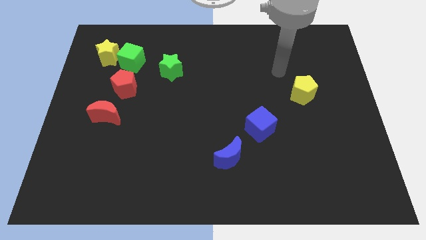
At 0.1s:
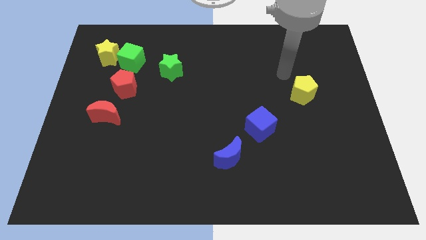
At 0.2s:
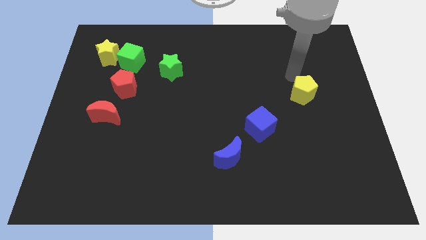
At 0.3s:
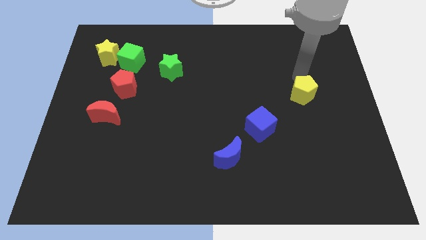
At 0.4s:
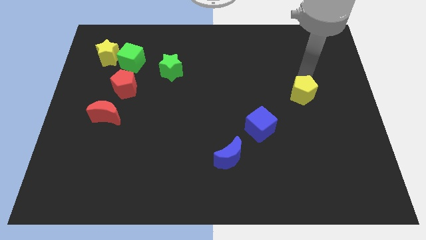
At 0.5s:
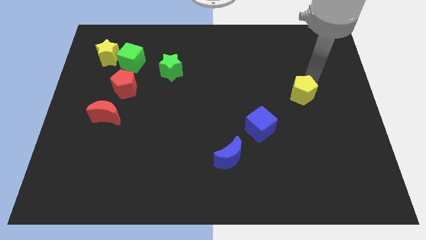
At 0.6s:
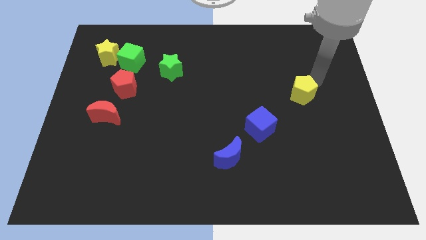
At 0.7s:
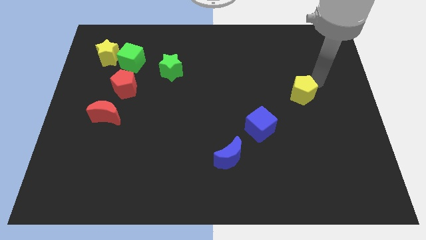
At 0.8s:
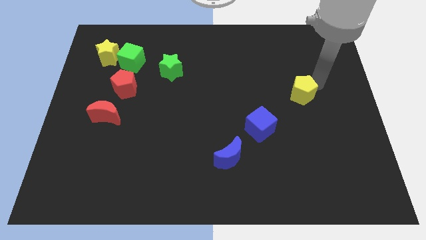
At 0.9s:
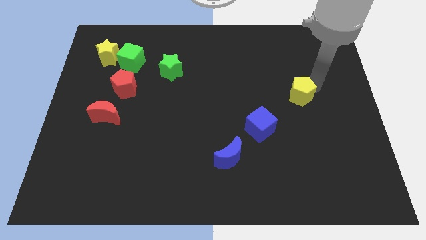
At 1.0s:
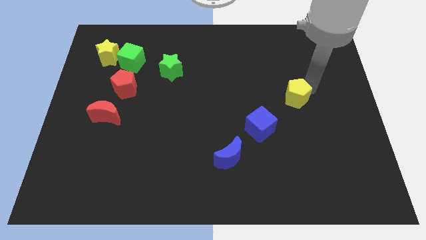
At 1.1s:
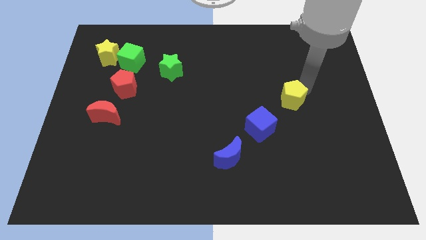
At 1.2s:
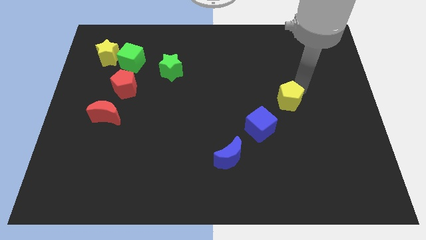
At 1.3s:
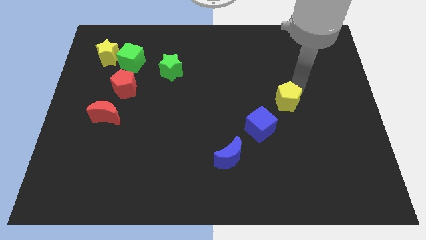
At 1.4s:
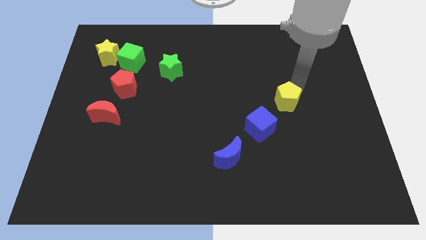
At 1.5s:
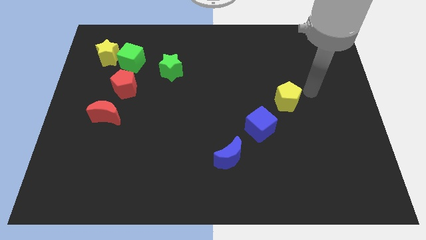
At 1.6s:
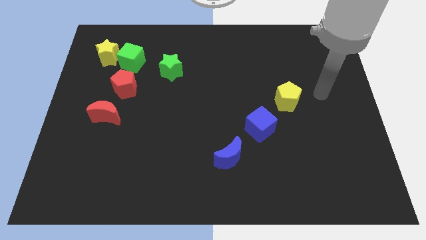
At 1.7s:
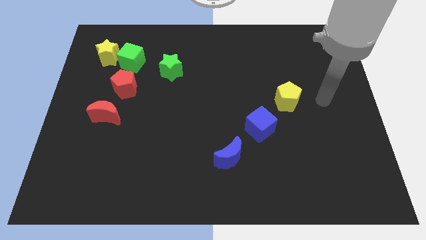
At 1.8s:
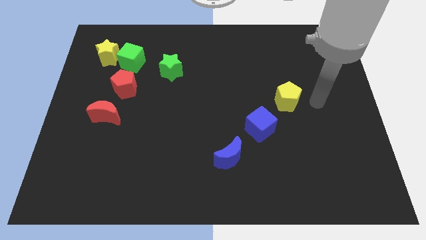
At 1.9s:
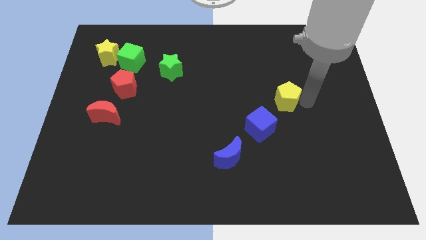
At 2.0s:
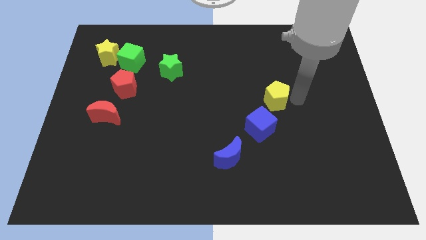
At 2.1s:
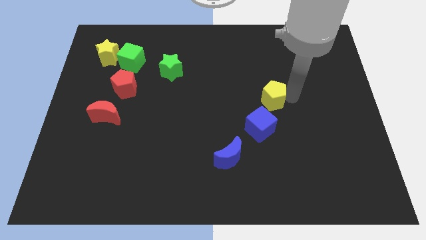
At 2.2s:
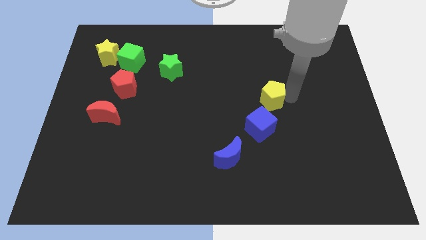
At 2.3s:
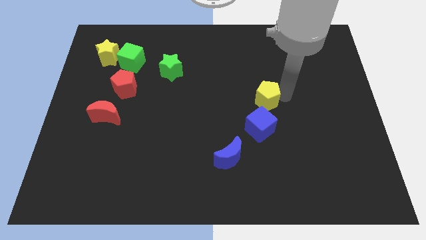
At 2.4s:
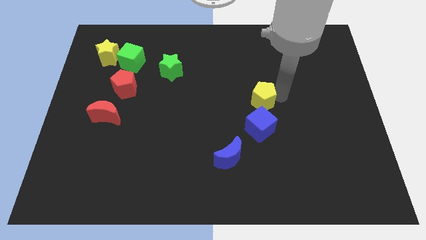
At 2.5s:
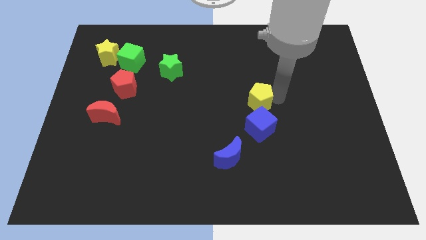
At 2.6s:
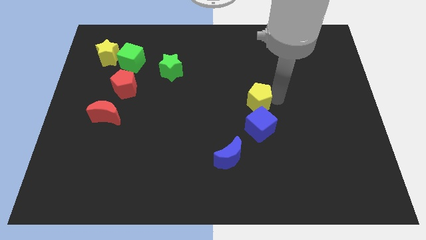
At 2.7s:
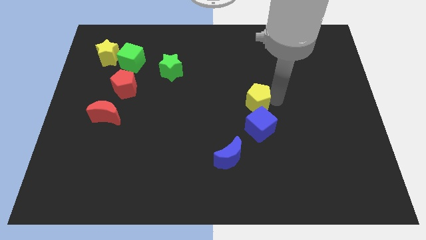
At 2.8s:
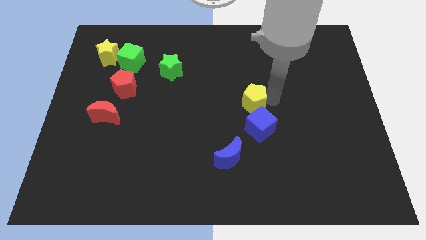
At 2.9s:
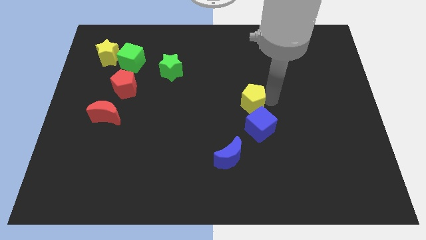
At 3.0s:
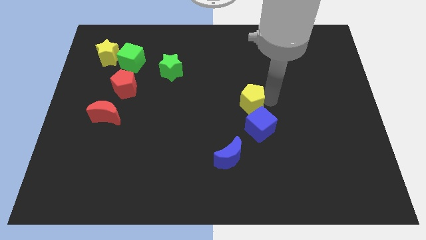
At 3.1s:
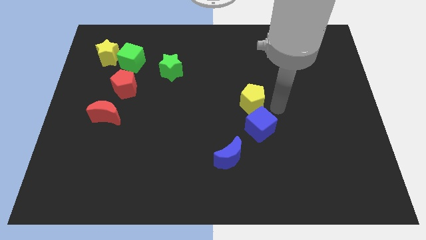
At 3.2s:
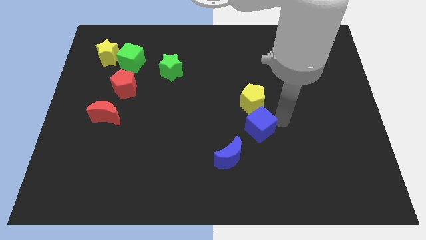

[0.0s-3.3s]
place the yellow pentagon to the top of blue cube

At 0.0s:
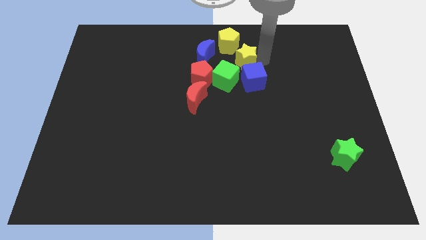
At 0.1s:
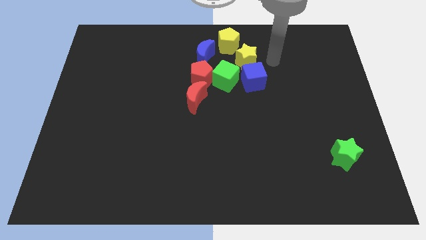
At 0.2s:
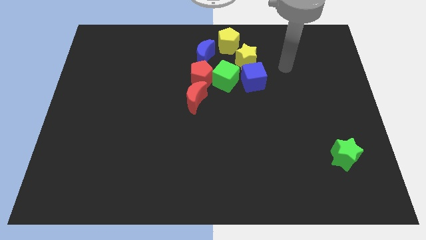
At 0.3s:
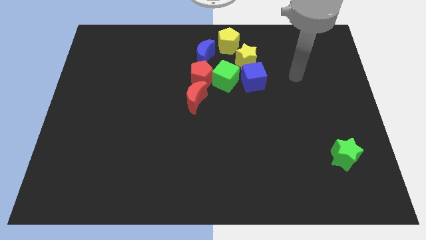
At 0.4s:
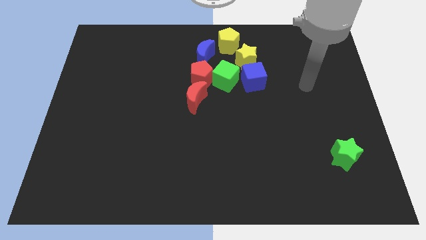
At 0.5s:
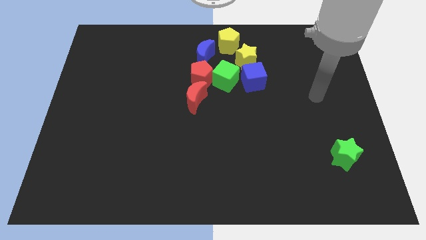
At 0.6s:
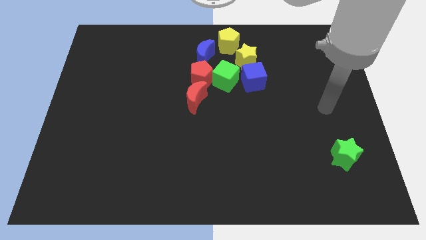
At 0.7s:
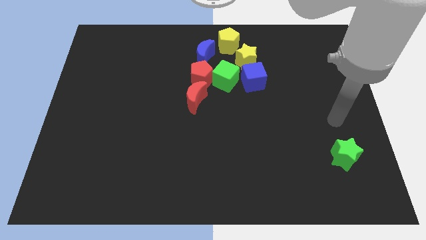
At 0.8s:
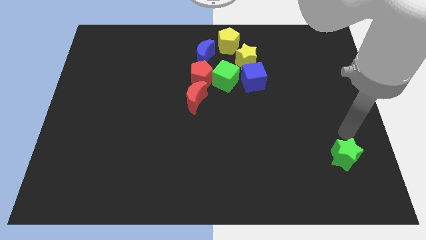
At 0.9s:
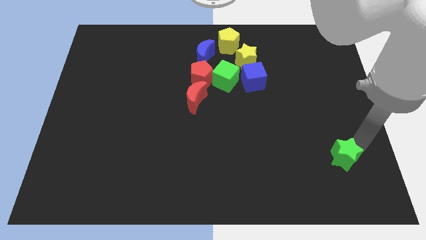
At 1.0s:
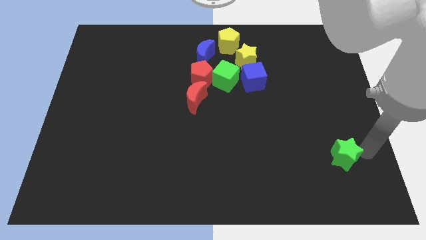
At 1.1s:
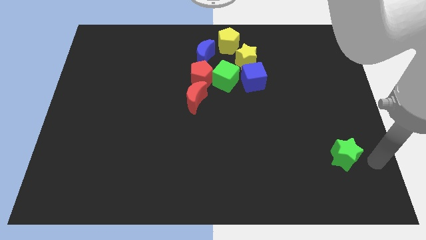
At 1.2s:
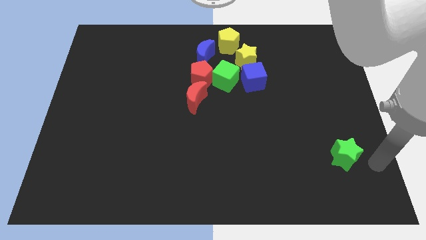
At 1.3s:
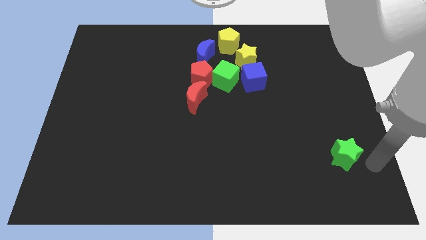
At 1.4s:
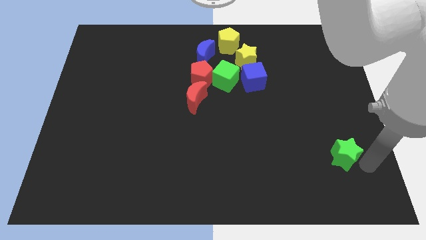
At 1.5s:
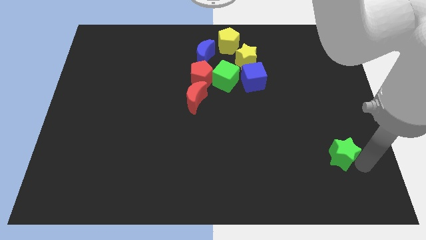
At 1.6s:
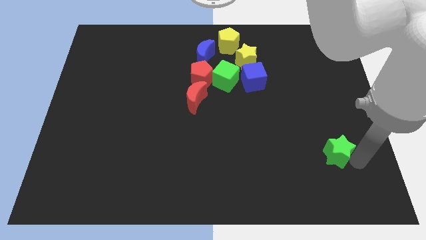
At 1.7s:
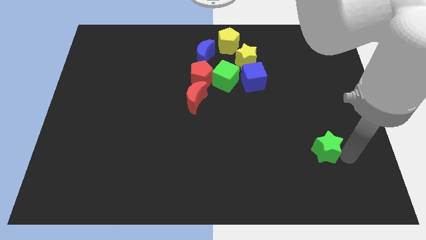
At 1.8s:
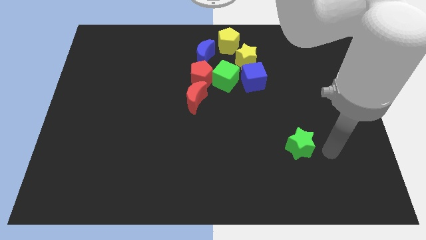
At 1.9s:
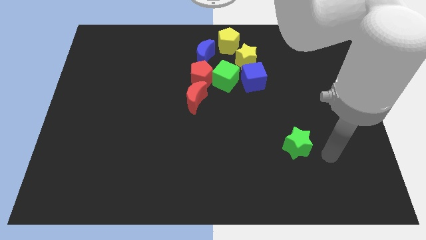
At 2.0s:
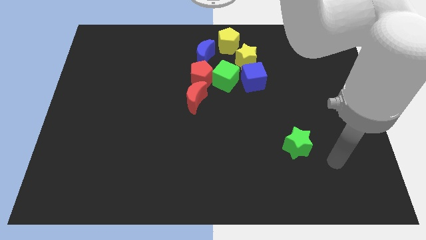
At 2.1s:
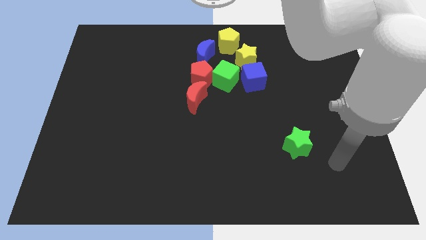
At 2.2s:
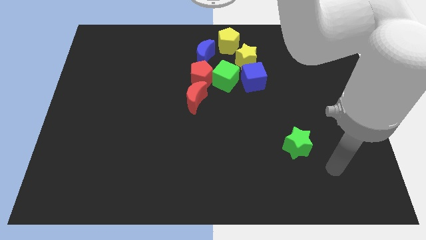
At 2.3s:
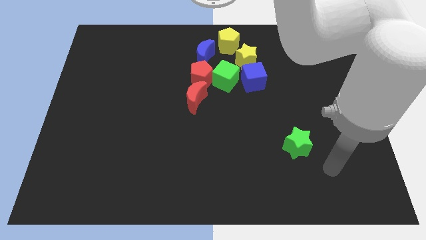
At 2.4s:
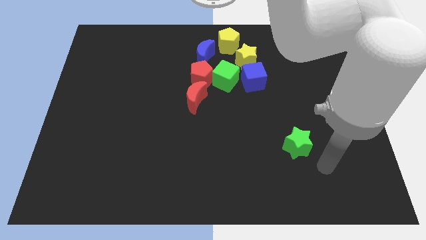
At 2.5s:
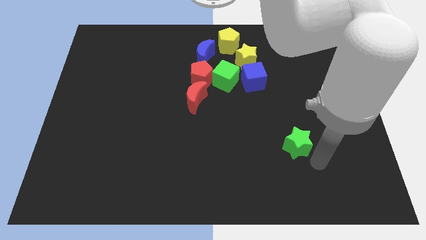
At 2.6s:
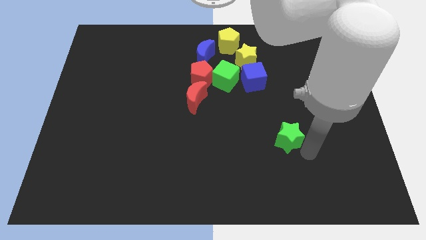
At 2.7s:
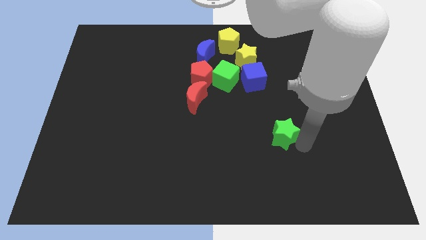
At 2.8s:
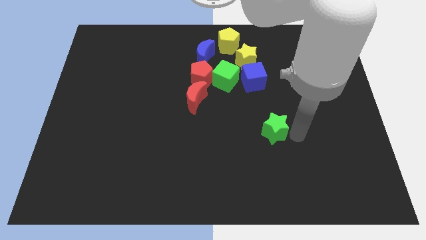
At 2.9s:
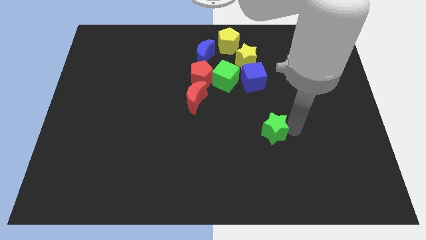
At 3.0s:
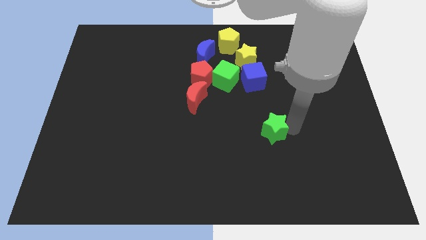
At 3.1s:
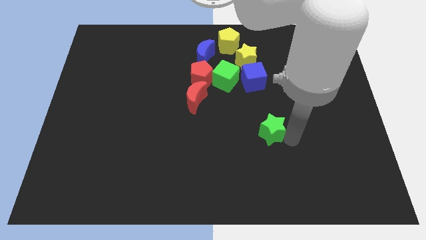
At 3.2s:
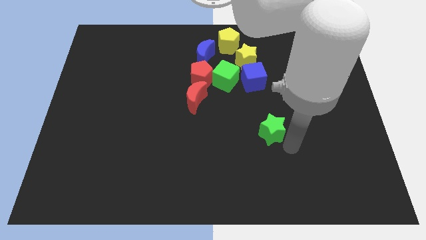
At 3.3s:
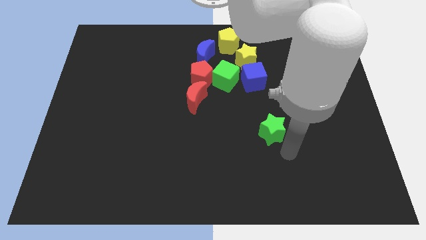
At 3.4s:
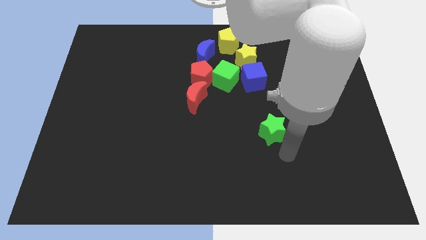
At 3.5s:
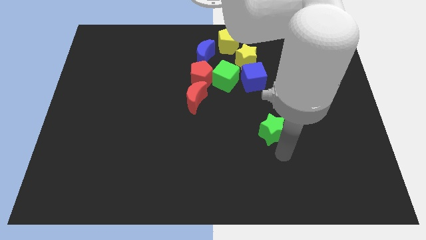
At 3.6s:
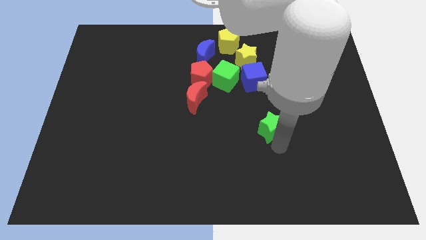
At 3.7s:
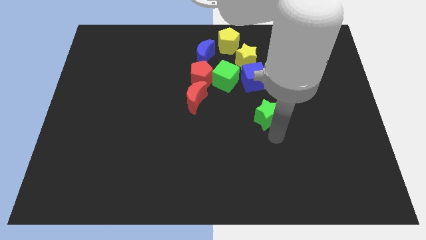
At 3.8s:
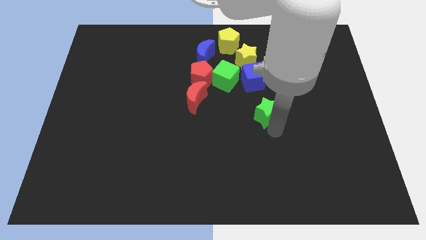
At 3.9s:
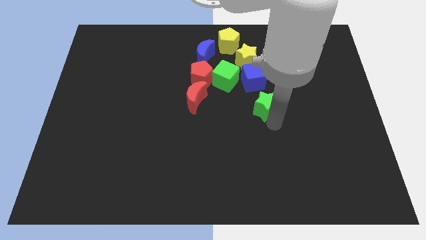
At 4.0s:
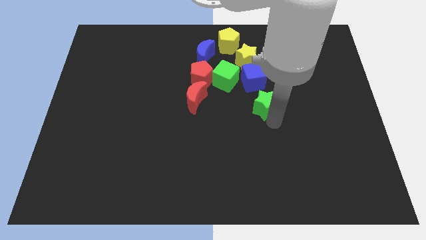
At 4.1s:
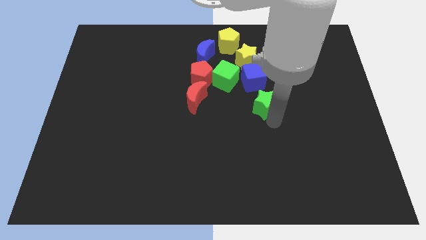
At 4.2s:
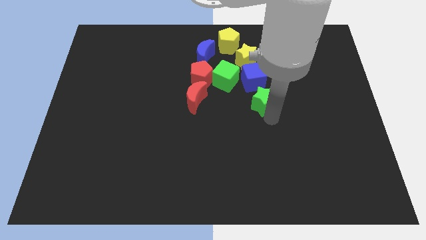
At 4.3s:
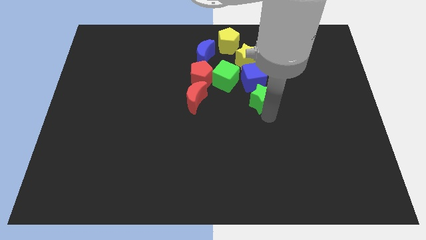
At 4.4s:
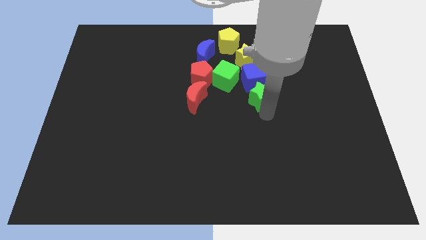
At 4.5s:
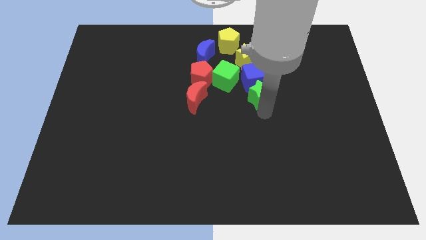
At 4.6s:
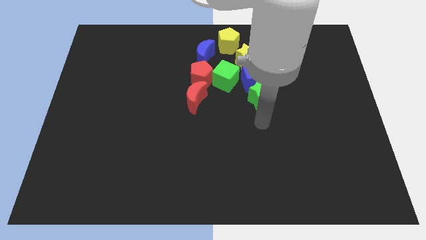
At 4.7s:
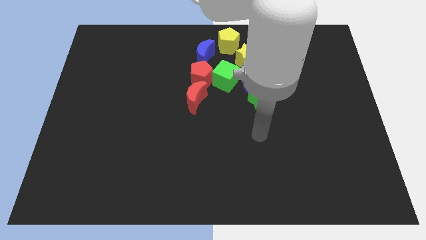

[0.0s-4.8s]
move the green star down to the blue square

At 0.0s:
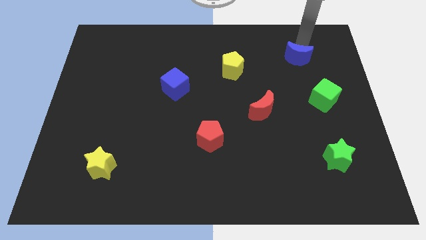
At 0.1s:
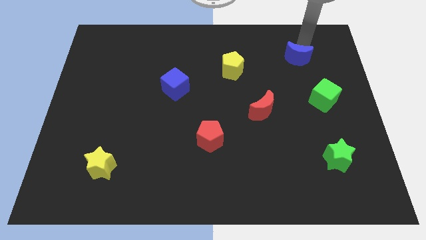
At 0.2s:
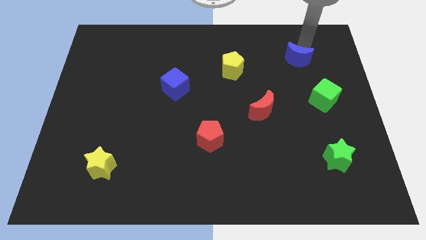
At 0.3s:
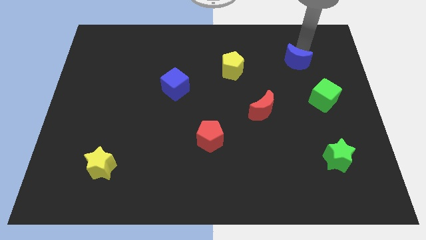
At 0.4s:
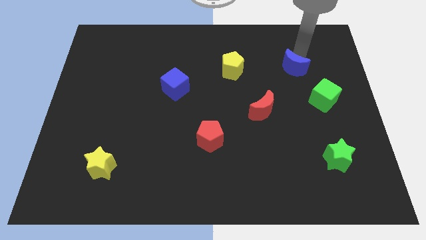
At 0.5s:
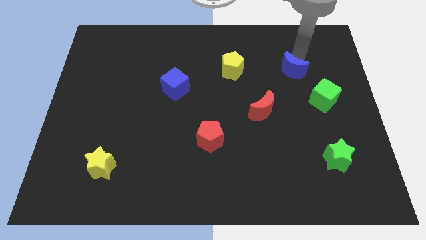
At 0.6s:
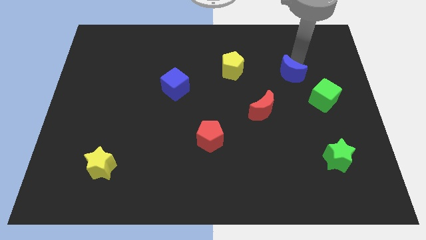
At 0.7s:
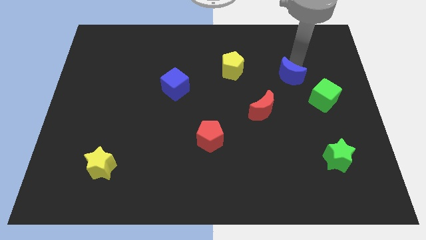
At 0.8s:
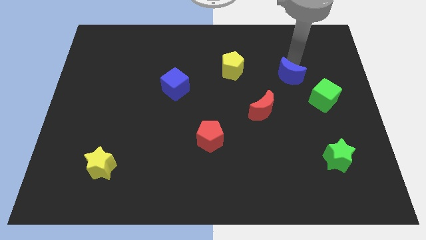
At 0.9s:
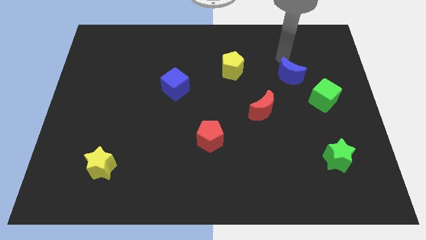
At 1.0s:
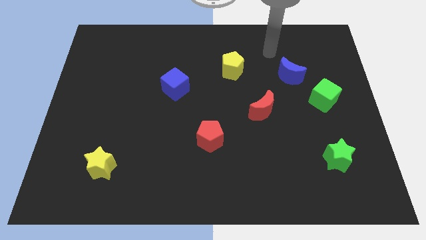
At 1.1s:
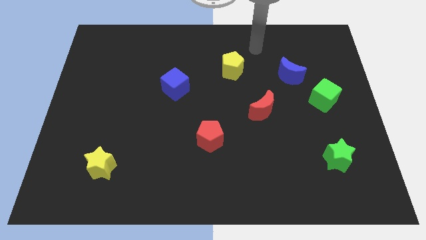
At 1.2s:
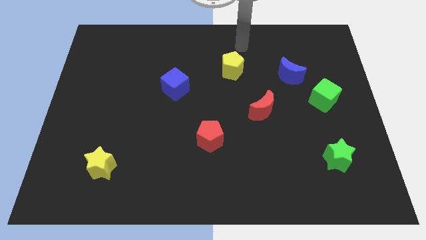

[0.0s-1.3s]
push the blue moon downwards slightly
